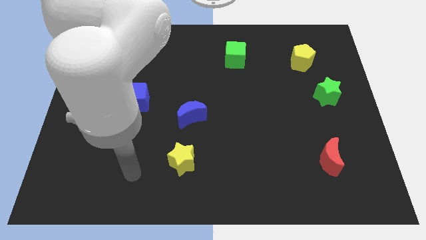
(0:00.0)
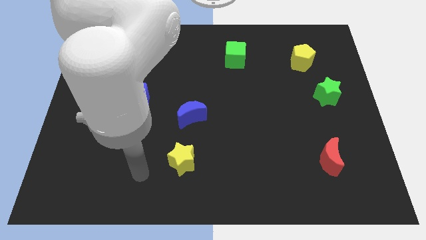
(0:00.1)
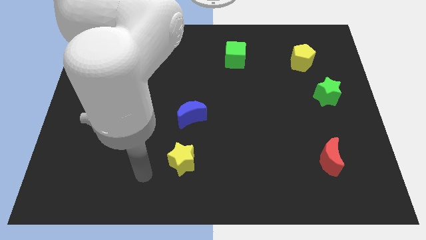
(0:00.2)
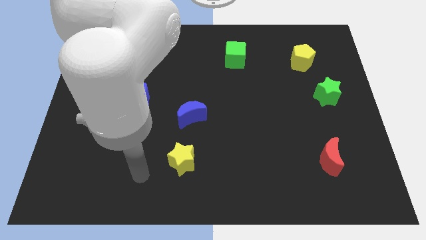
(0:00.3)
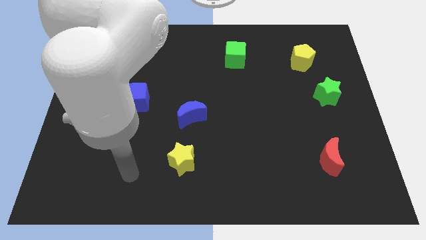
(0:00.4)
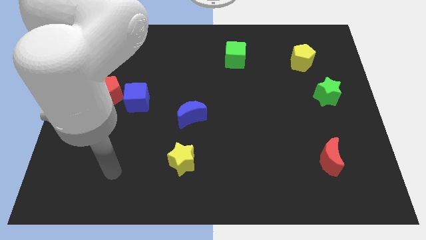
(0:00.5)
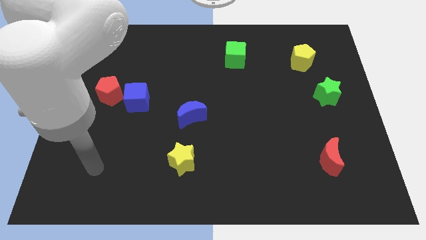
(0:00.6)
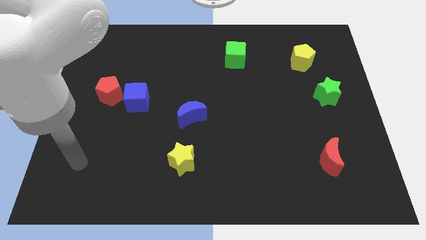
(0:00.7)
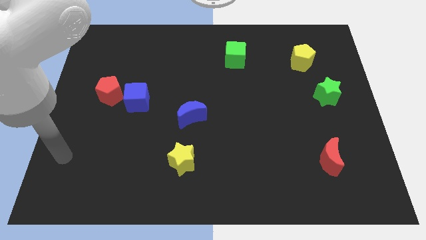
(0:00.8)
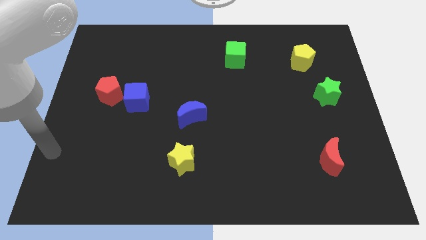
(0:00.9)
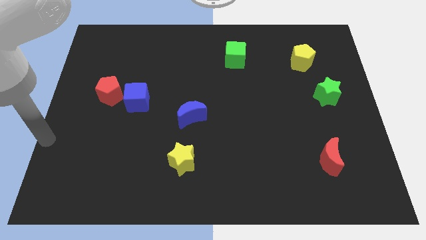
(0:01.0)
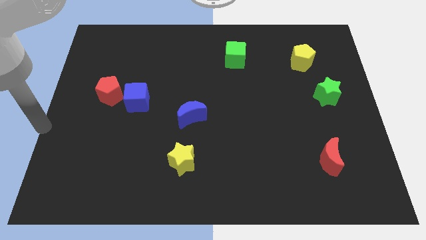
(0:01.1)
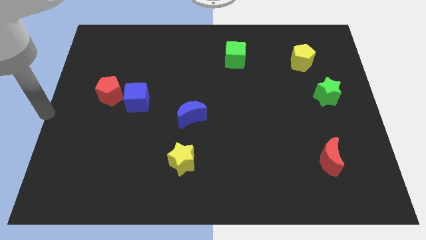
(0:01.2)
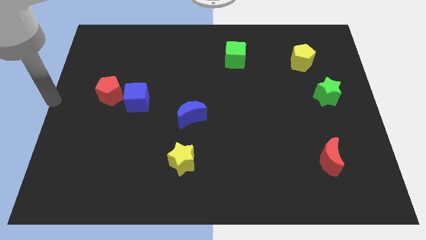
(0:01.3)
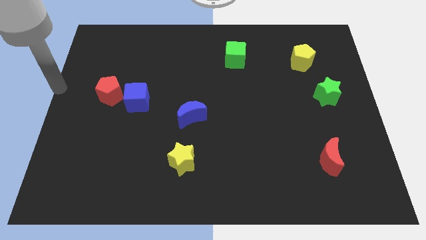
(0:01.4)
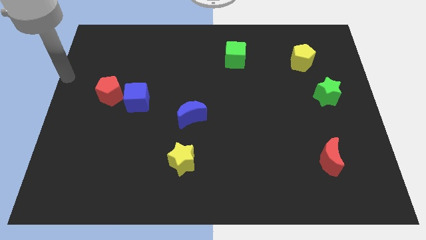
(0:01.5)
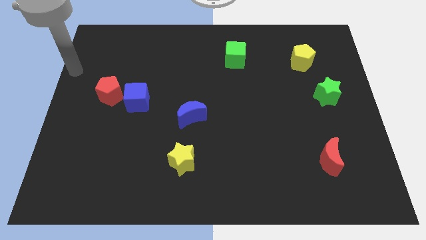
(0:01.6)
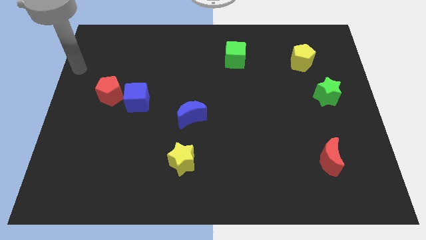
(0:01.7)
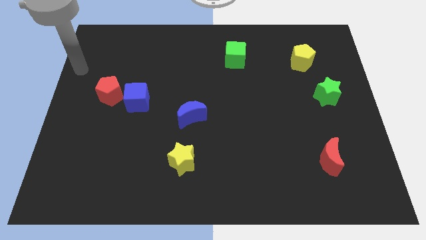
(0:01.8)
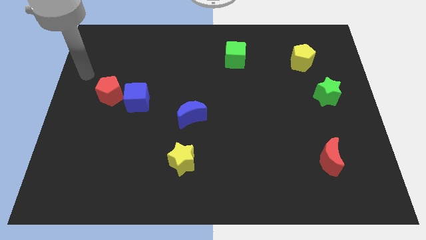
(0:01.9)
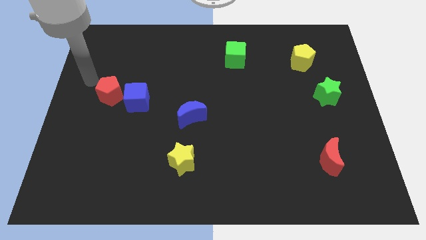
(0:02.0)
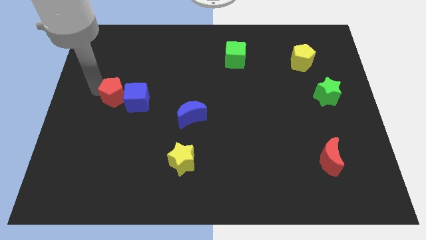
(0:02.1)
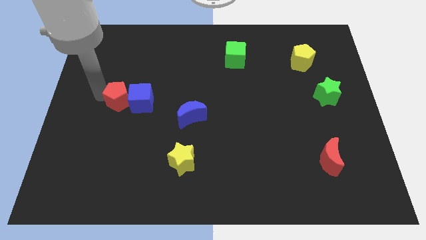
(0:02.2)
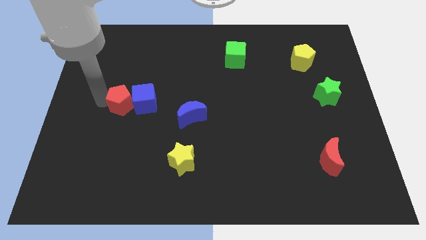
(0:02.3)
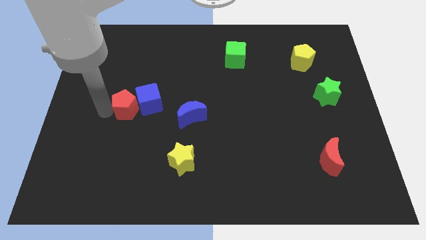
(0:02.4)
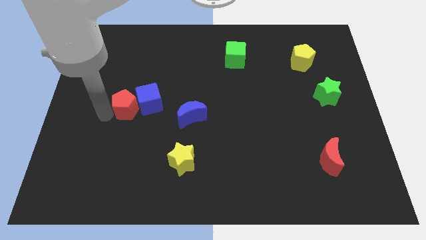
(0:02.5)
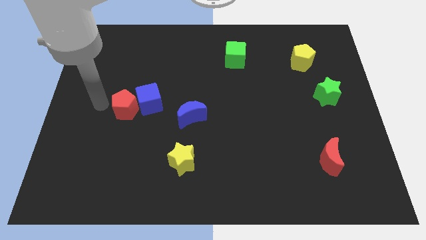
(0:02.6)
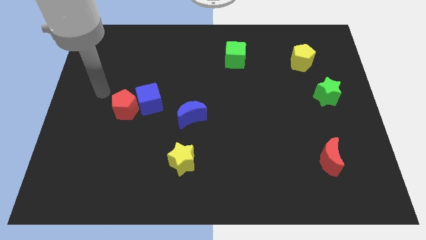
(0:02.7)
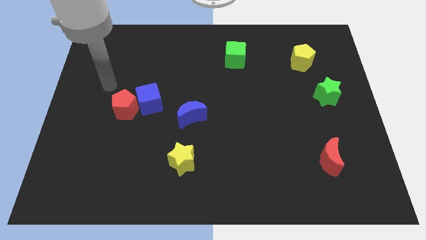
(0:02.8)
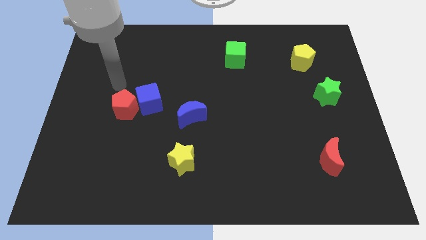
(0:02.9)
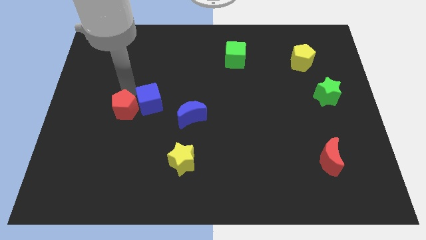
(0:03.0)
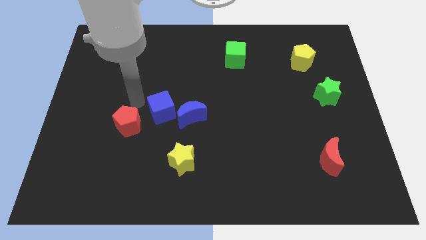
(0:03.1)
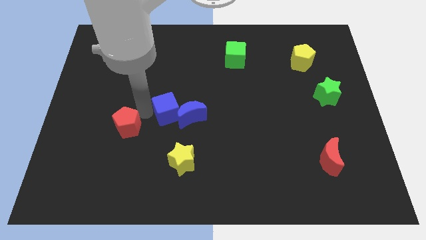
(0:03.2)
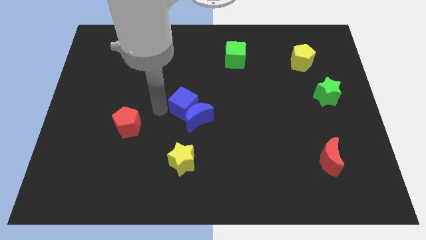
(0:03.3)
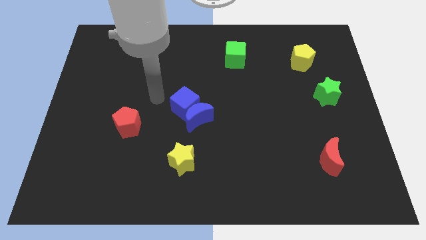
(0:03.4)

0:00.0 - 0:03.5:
place the blue cube above the blue crescent

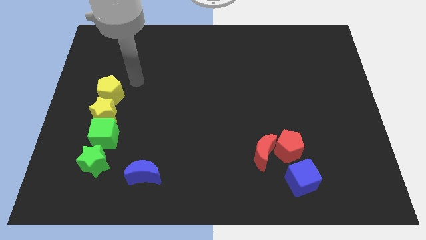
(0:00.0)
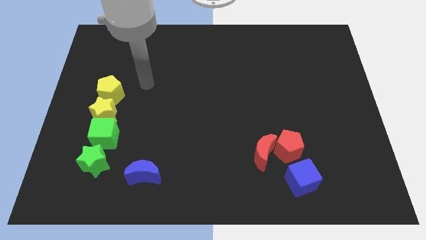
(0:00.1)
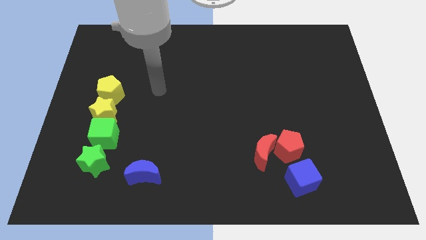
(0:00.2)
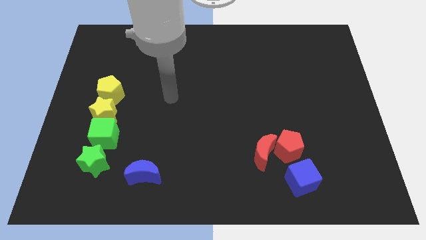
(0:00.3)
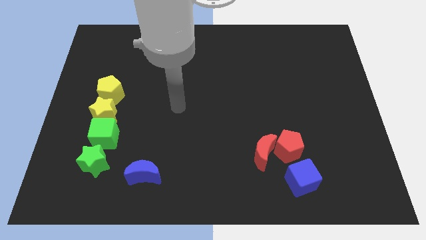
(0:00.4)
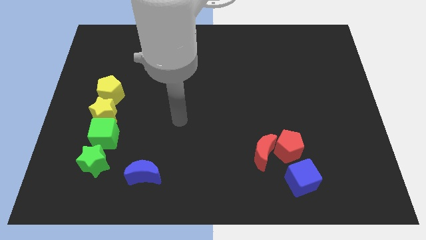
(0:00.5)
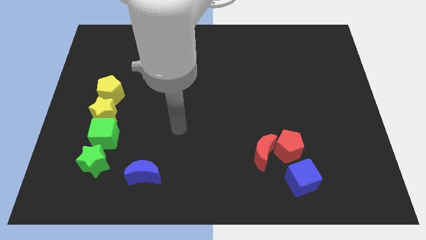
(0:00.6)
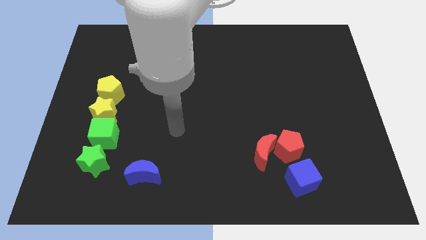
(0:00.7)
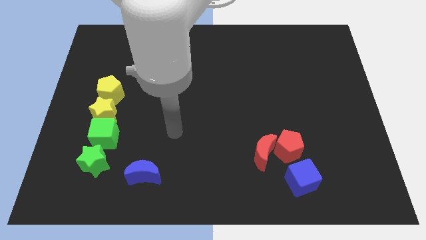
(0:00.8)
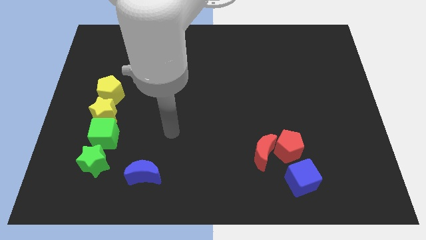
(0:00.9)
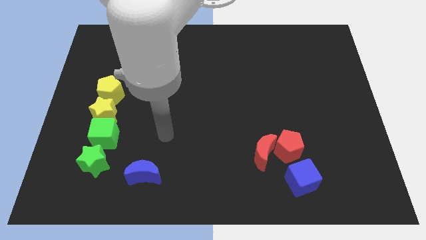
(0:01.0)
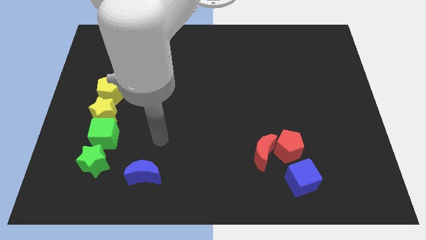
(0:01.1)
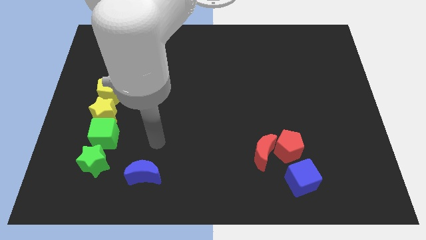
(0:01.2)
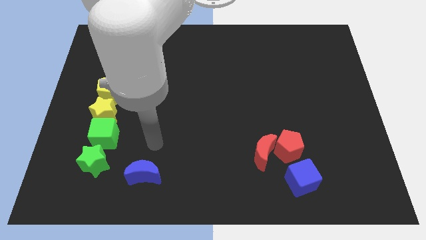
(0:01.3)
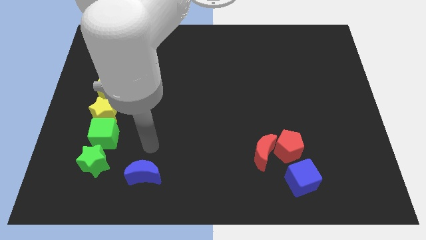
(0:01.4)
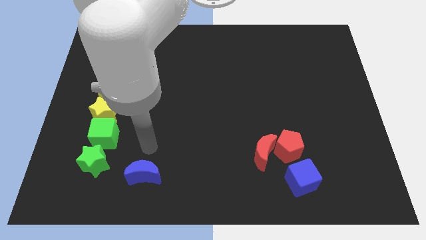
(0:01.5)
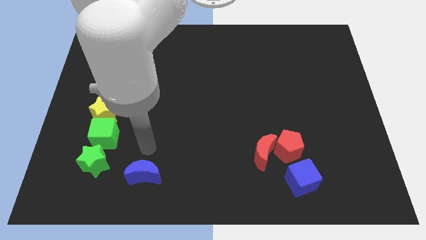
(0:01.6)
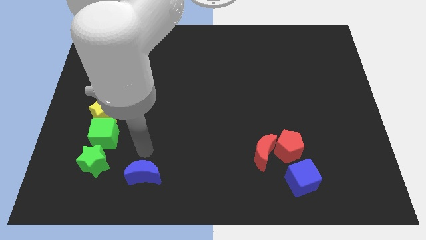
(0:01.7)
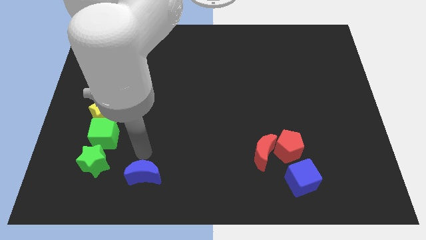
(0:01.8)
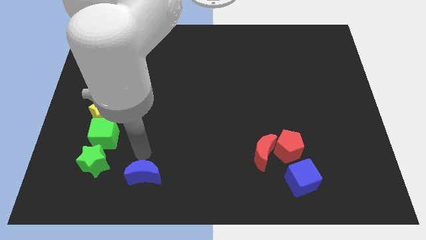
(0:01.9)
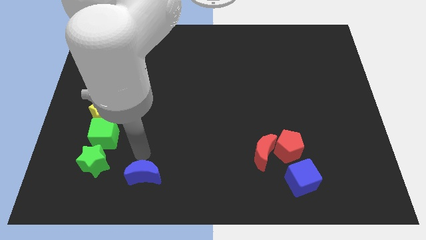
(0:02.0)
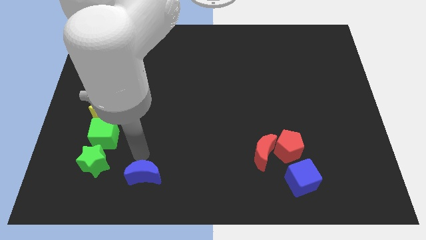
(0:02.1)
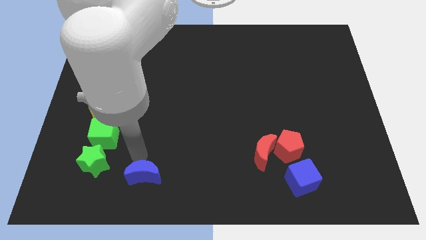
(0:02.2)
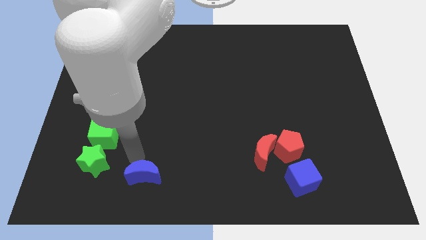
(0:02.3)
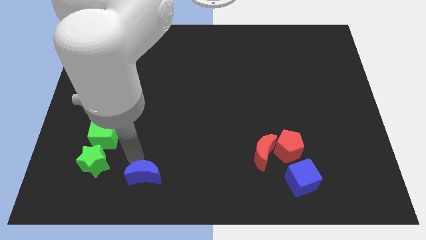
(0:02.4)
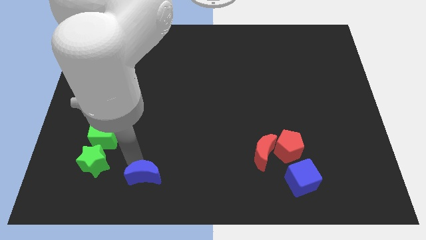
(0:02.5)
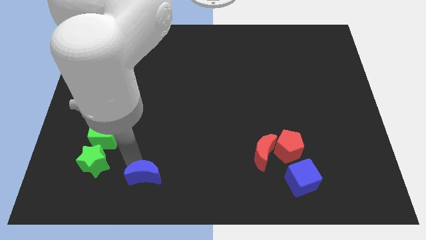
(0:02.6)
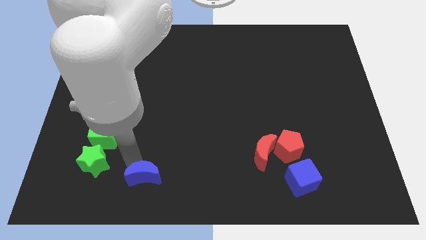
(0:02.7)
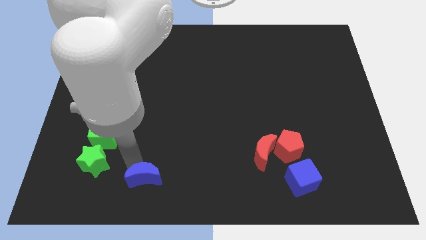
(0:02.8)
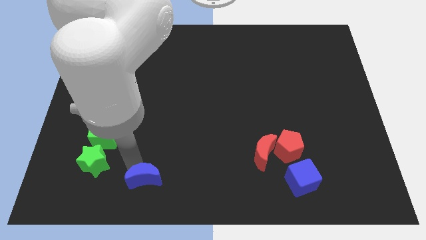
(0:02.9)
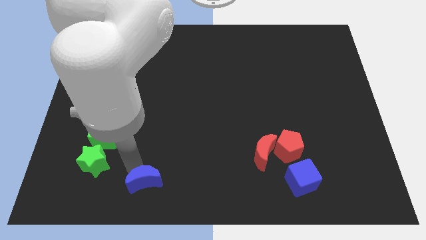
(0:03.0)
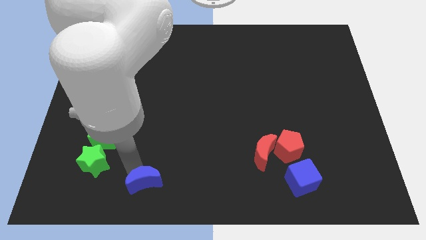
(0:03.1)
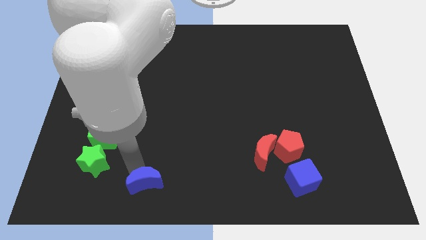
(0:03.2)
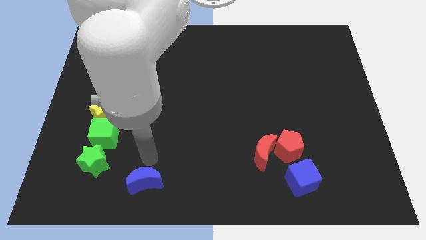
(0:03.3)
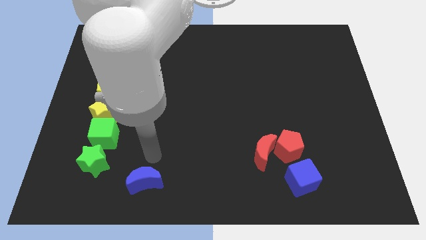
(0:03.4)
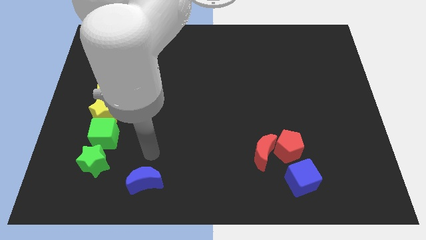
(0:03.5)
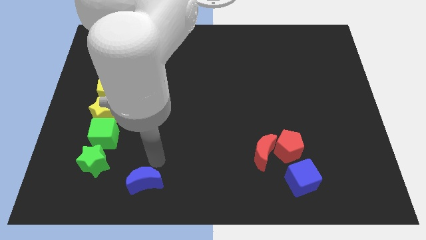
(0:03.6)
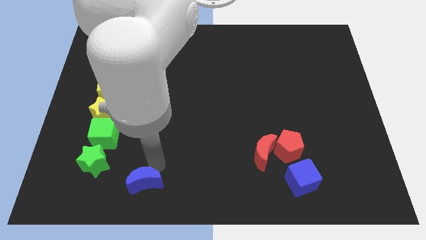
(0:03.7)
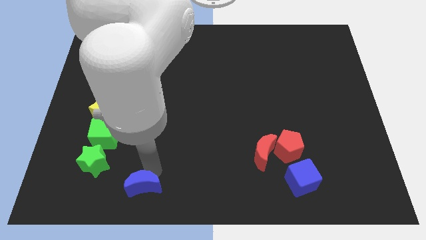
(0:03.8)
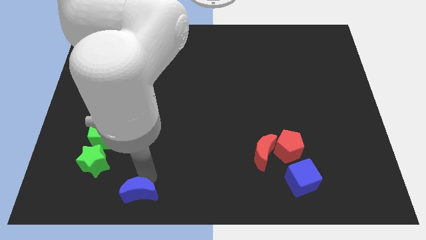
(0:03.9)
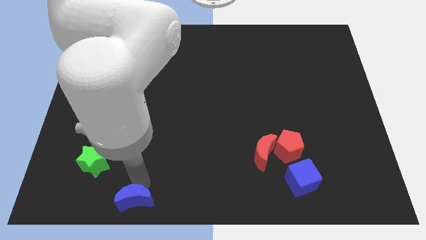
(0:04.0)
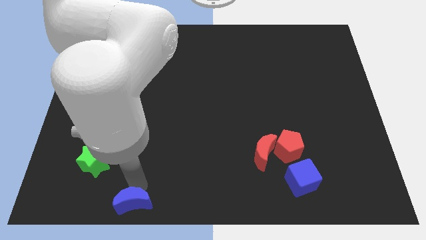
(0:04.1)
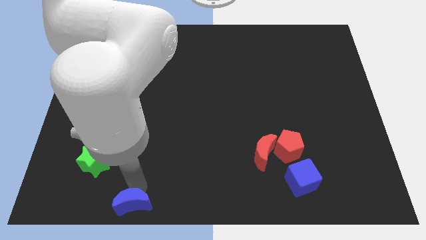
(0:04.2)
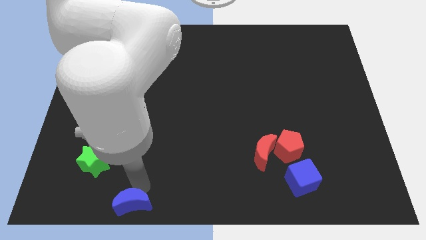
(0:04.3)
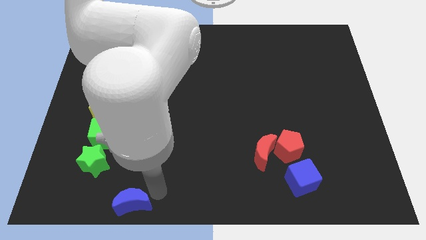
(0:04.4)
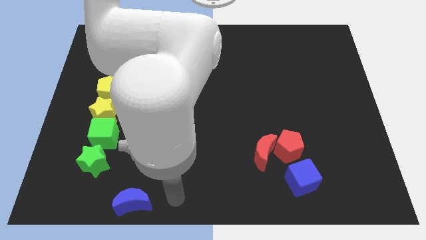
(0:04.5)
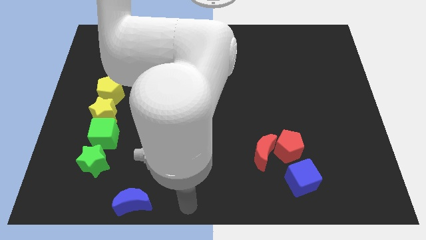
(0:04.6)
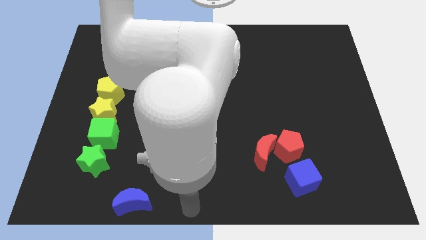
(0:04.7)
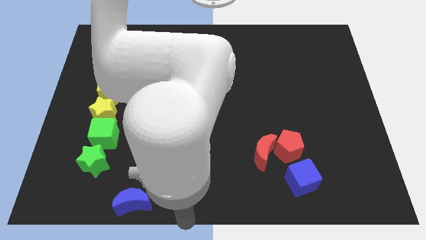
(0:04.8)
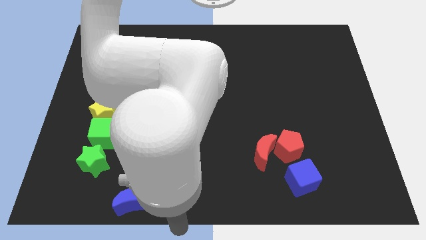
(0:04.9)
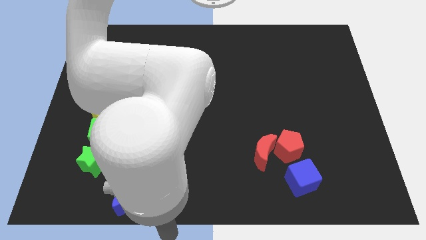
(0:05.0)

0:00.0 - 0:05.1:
move the blue moon slightly to the bottom side of the board

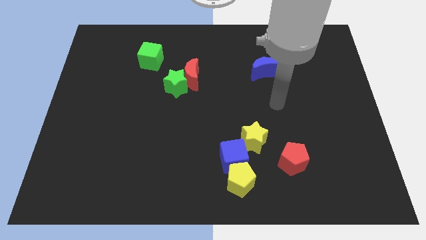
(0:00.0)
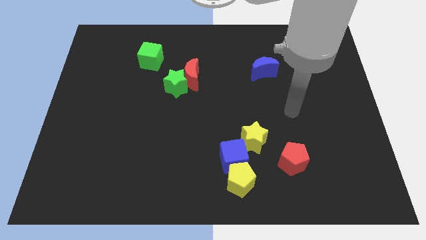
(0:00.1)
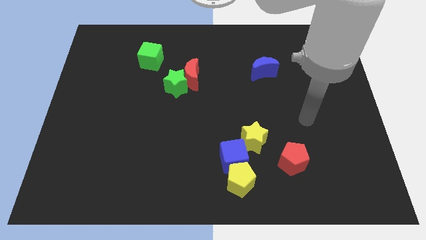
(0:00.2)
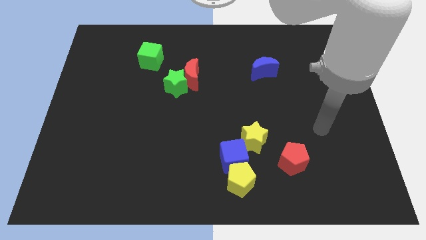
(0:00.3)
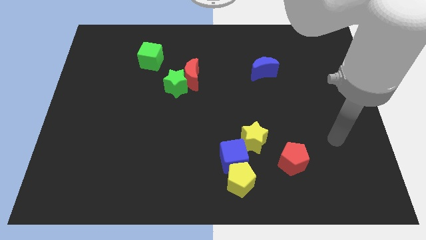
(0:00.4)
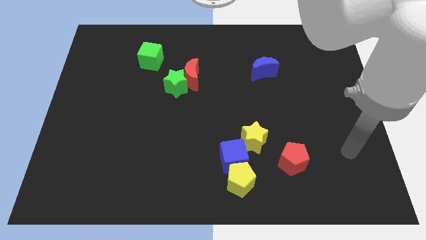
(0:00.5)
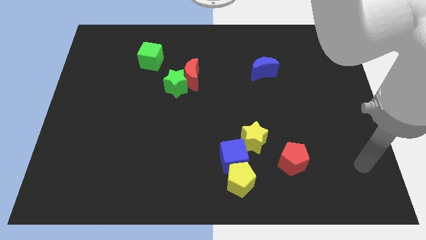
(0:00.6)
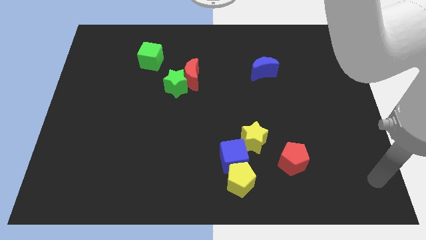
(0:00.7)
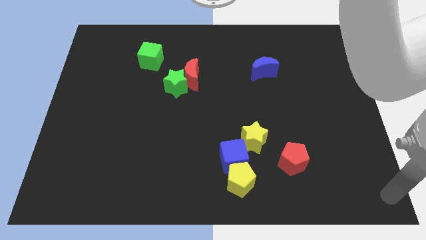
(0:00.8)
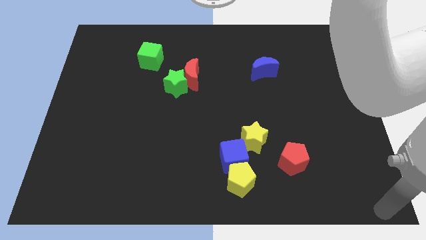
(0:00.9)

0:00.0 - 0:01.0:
put arm on bottom right corner
